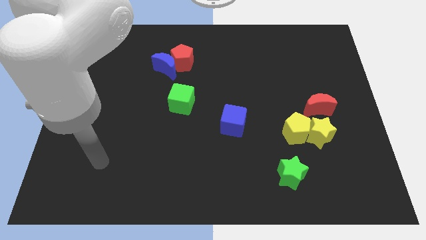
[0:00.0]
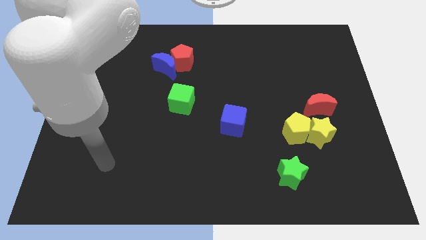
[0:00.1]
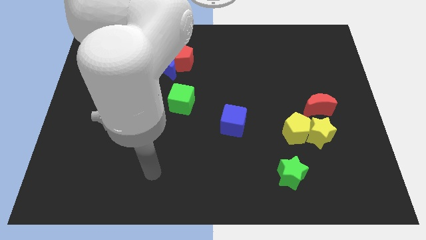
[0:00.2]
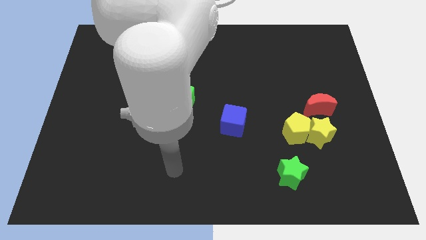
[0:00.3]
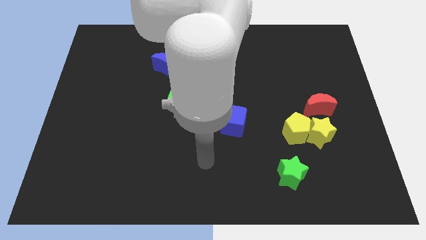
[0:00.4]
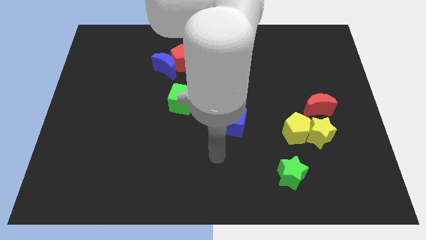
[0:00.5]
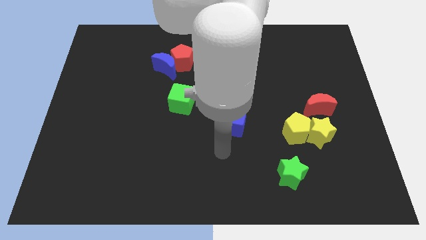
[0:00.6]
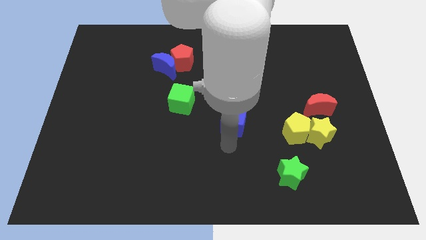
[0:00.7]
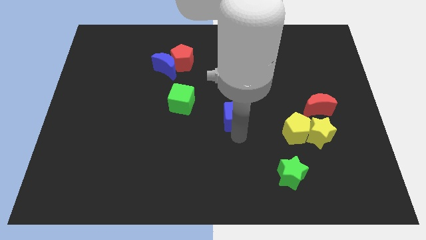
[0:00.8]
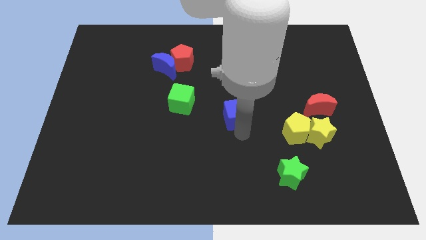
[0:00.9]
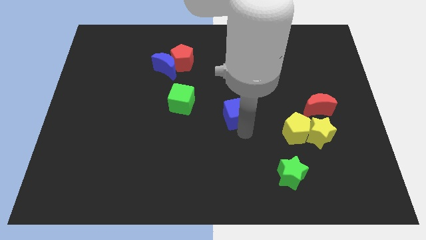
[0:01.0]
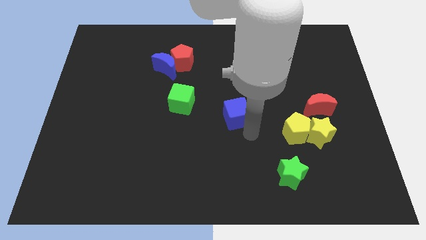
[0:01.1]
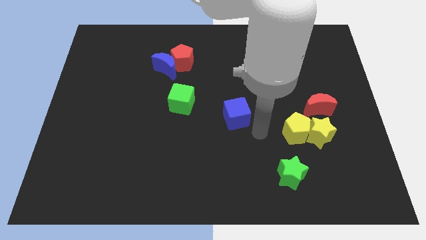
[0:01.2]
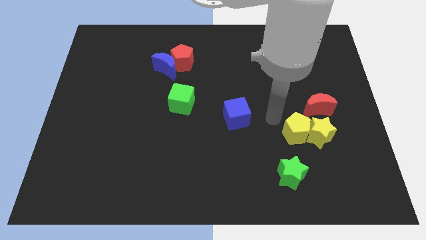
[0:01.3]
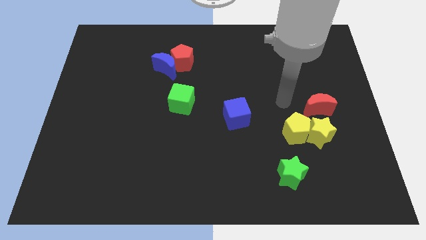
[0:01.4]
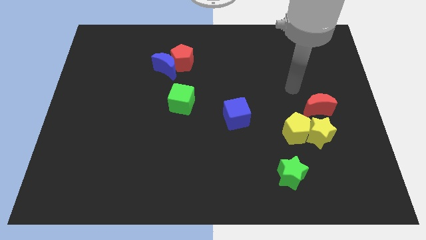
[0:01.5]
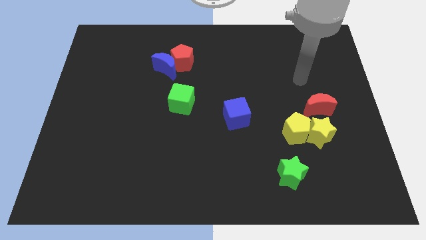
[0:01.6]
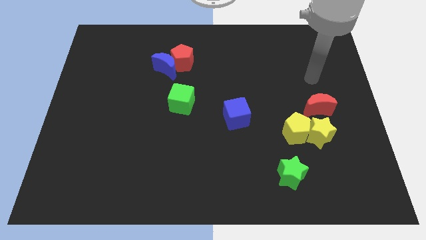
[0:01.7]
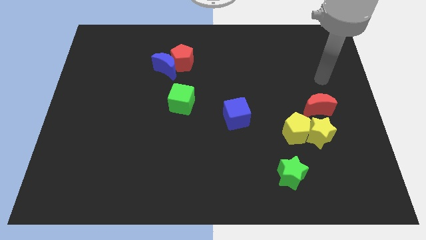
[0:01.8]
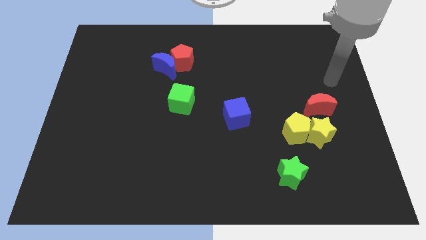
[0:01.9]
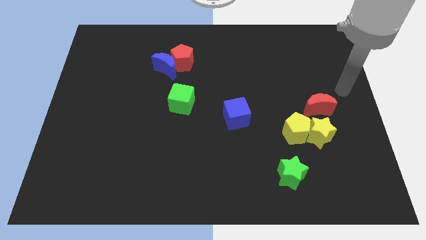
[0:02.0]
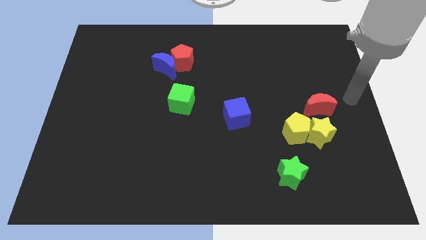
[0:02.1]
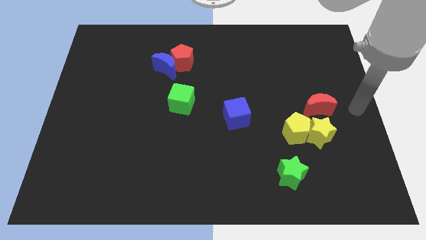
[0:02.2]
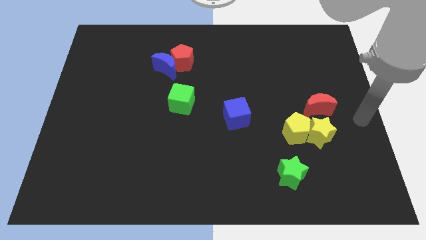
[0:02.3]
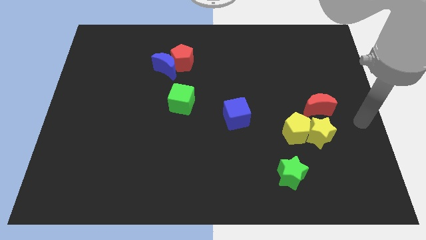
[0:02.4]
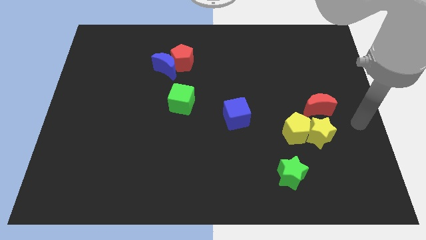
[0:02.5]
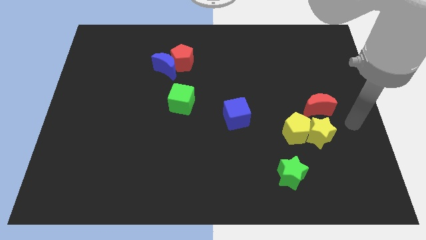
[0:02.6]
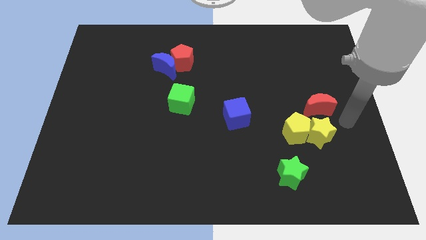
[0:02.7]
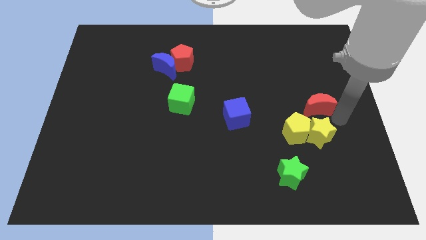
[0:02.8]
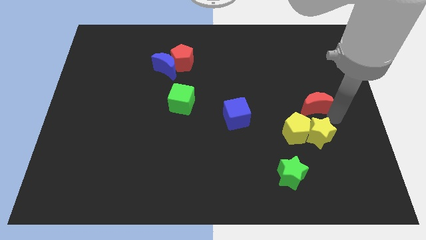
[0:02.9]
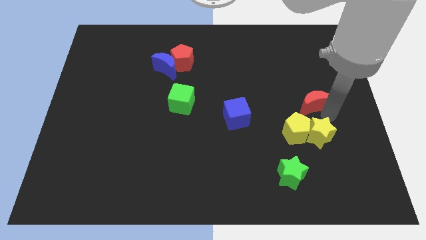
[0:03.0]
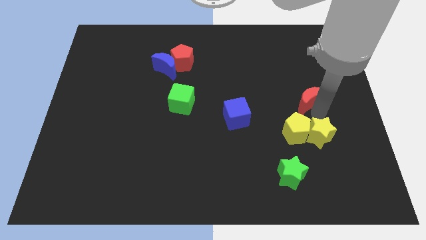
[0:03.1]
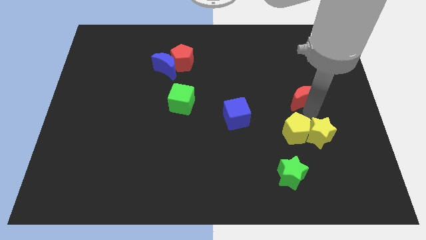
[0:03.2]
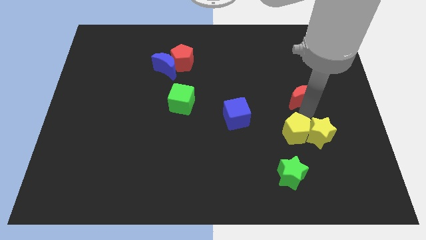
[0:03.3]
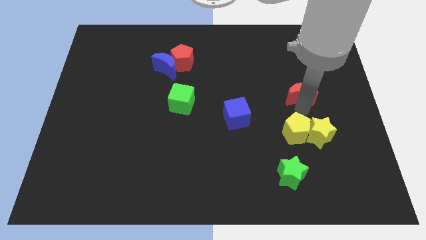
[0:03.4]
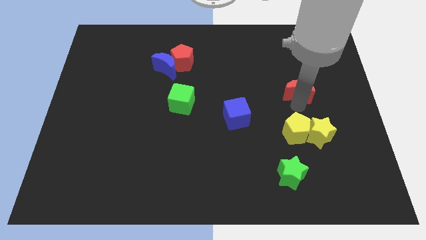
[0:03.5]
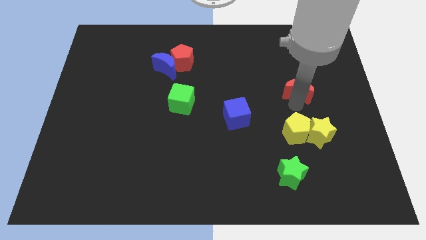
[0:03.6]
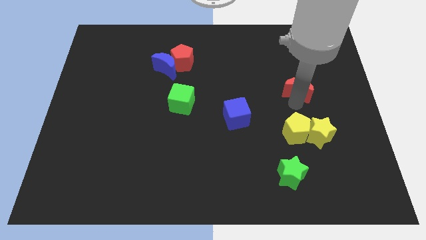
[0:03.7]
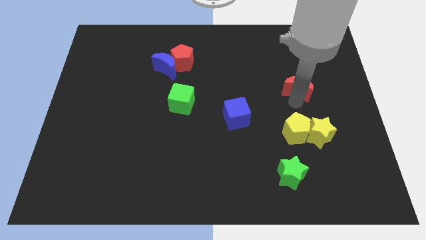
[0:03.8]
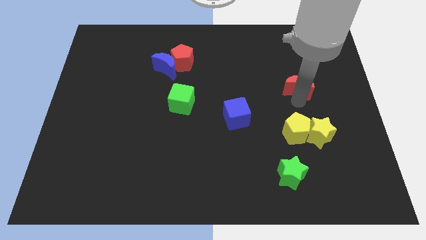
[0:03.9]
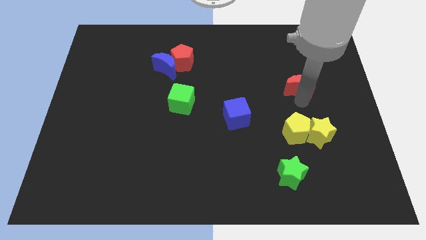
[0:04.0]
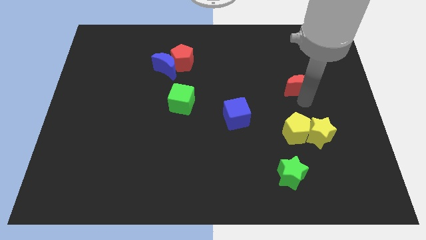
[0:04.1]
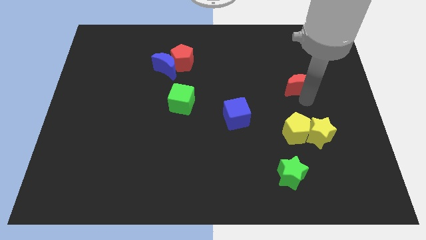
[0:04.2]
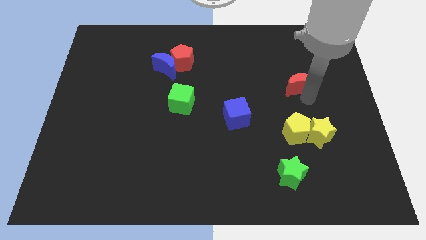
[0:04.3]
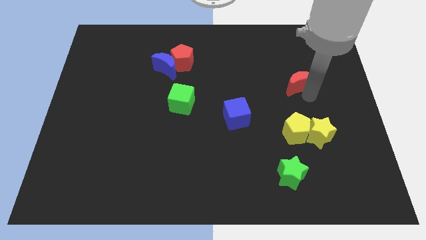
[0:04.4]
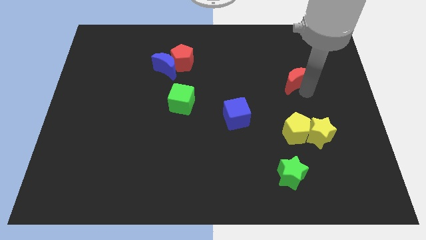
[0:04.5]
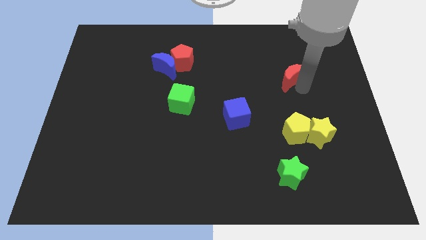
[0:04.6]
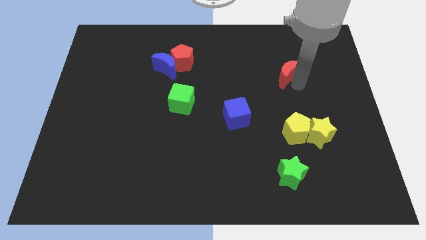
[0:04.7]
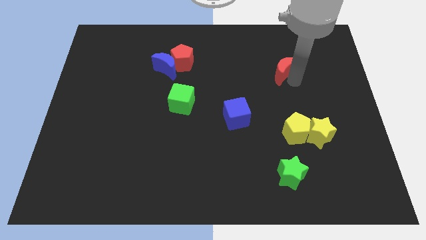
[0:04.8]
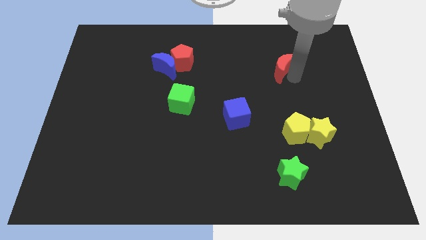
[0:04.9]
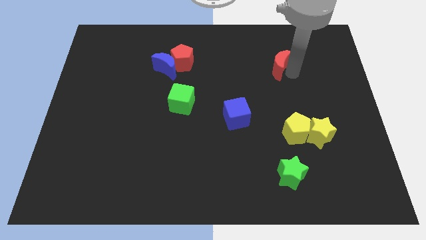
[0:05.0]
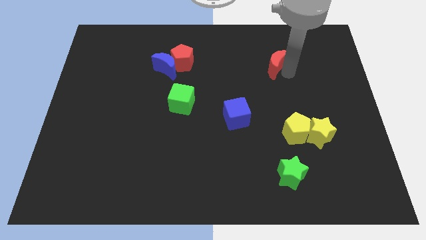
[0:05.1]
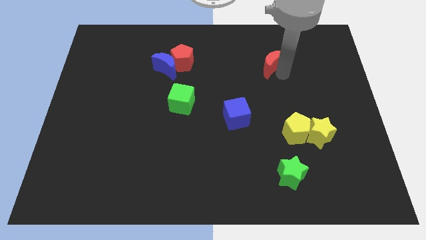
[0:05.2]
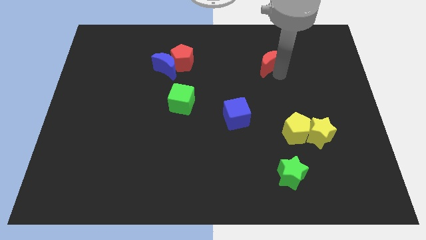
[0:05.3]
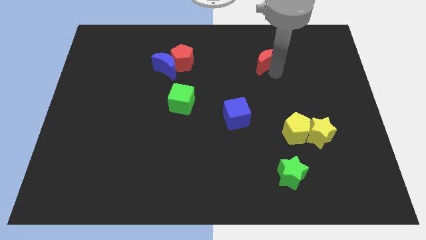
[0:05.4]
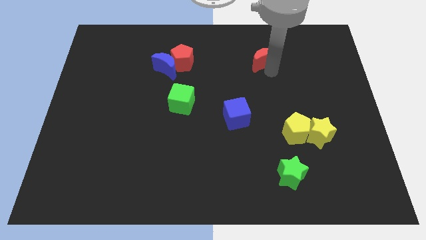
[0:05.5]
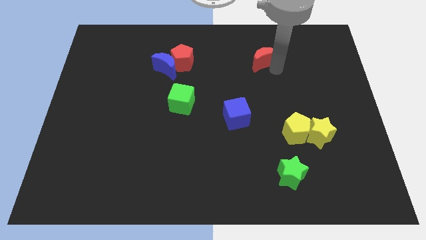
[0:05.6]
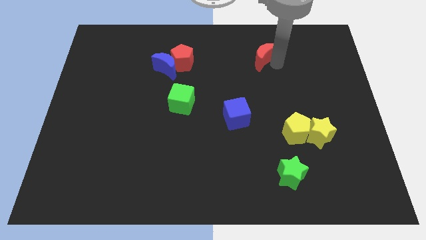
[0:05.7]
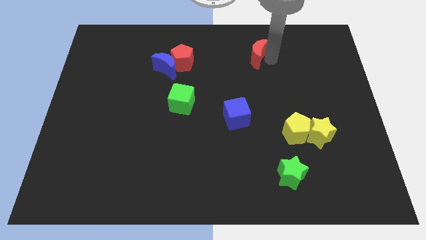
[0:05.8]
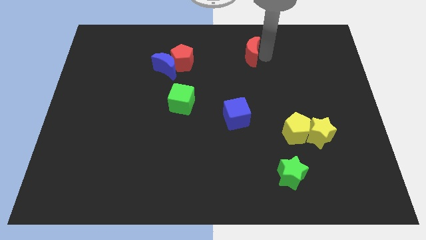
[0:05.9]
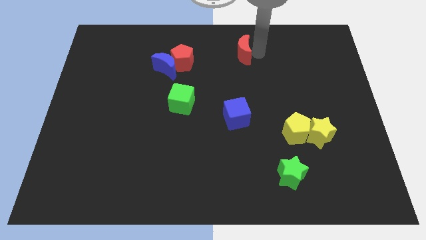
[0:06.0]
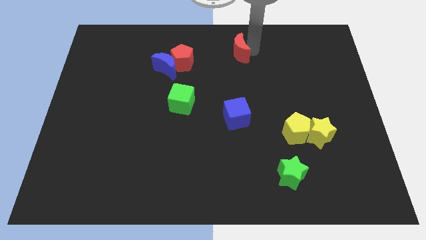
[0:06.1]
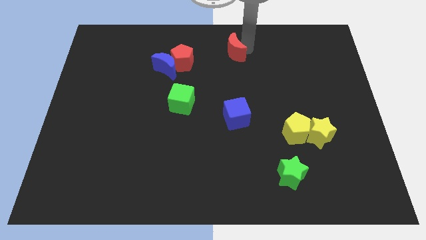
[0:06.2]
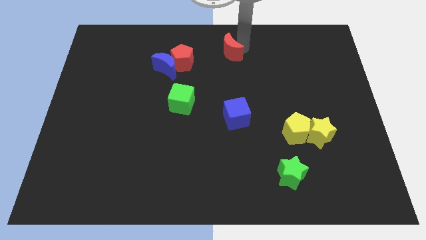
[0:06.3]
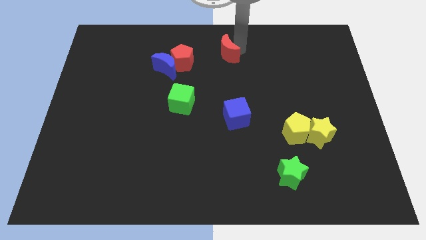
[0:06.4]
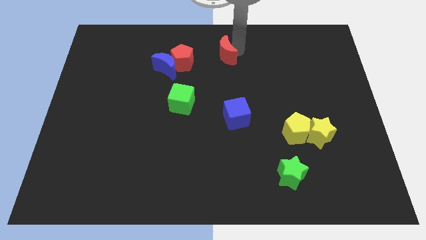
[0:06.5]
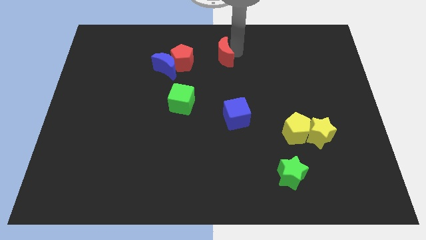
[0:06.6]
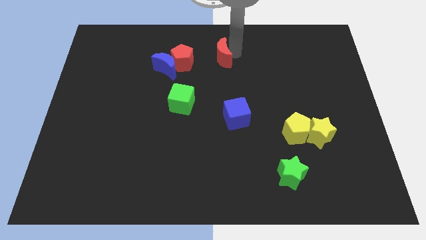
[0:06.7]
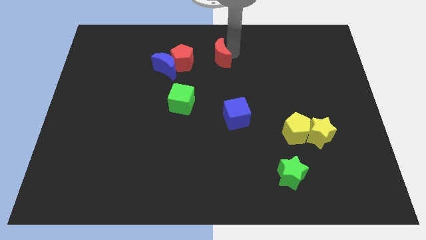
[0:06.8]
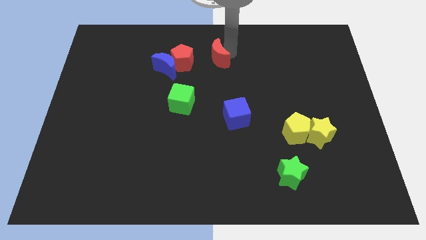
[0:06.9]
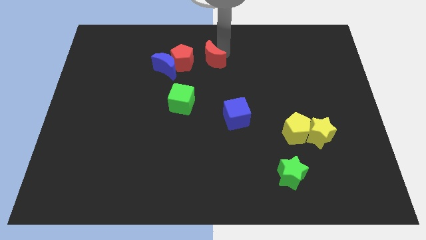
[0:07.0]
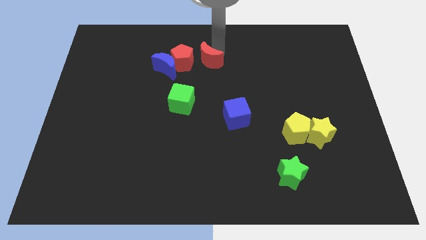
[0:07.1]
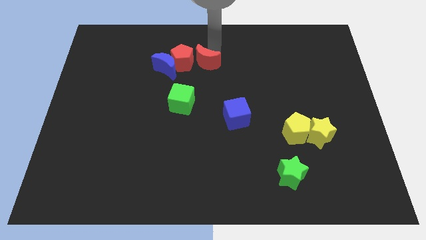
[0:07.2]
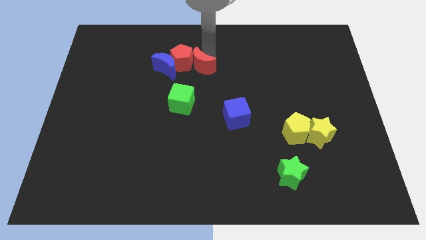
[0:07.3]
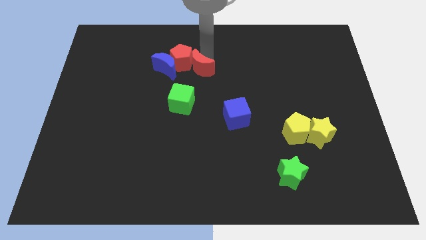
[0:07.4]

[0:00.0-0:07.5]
slide the red moon next to the red pentagon

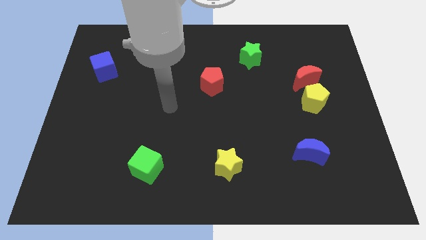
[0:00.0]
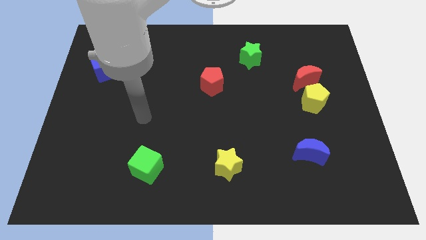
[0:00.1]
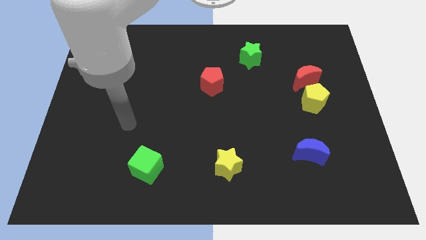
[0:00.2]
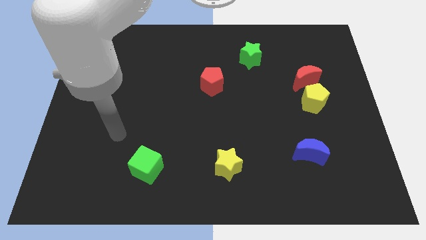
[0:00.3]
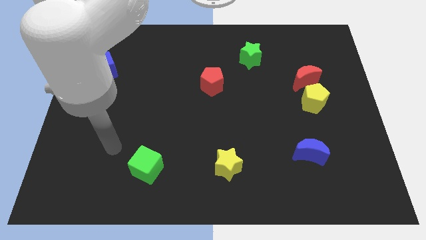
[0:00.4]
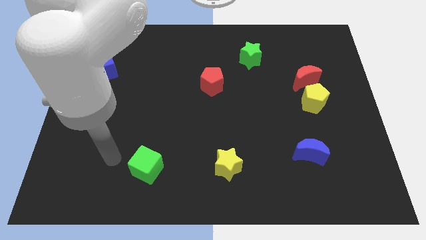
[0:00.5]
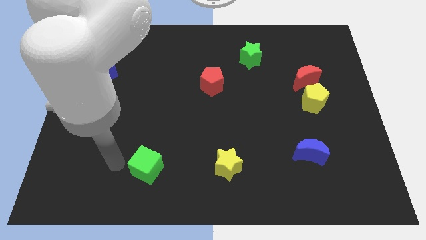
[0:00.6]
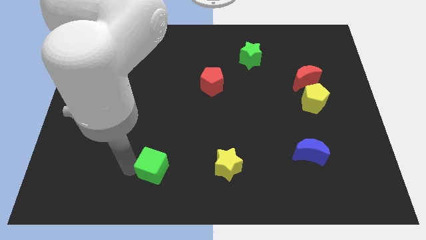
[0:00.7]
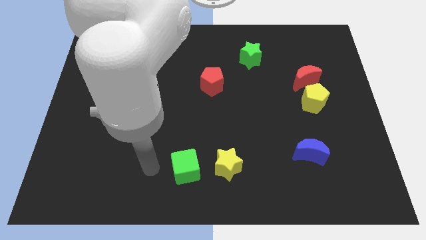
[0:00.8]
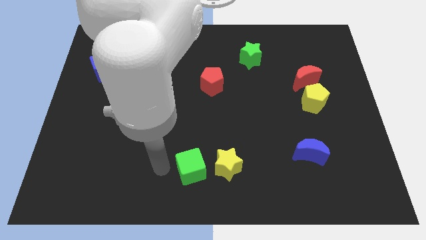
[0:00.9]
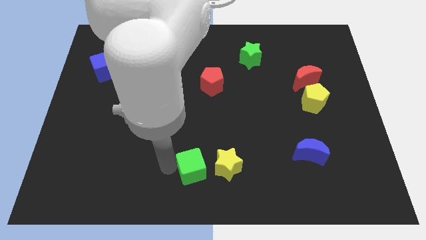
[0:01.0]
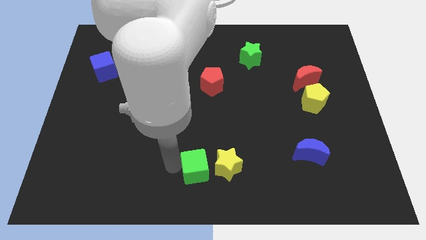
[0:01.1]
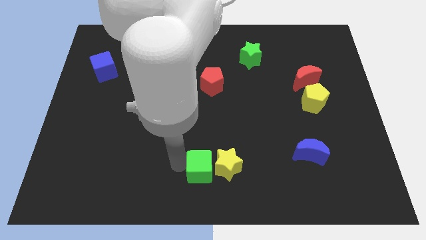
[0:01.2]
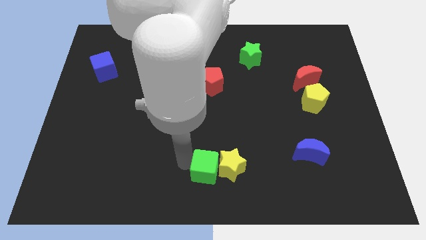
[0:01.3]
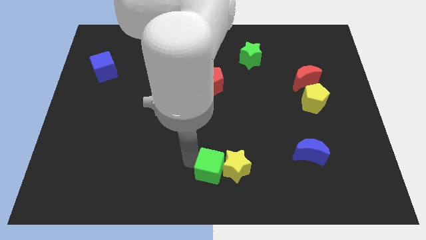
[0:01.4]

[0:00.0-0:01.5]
move the green cube to the yellow star
